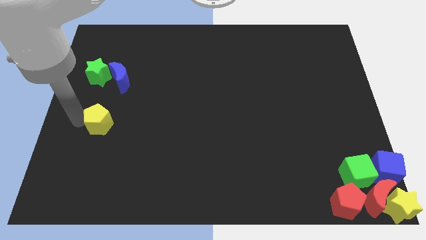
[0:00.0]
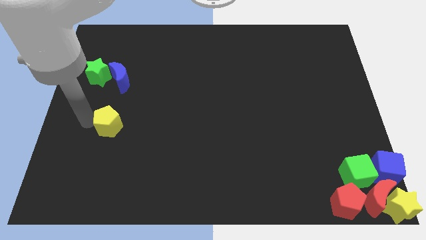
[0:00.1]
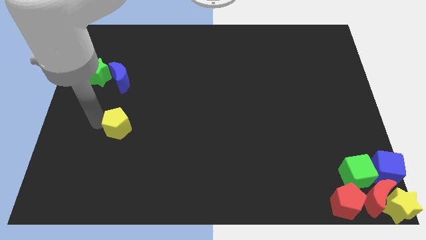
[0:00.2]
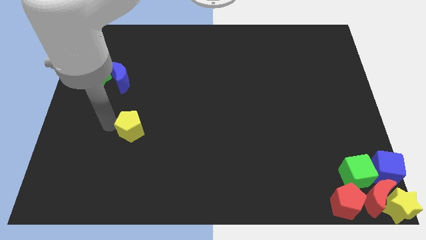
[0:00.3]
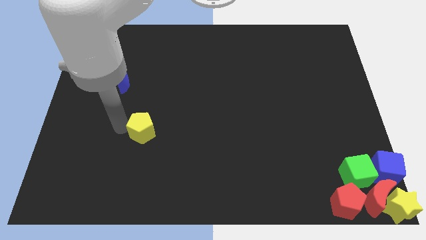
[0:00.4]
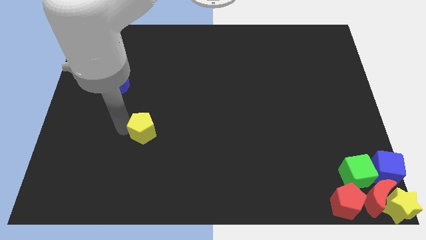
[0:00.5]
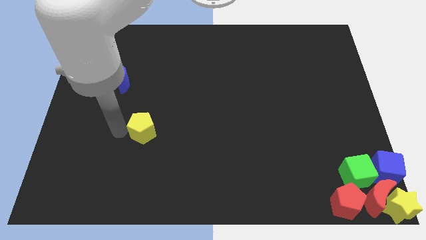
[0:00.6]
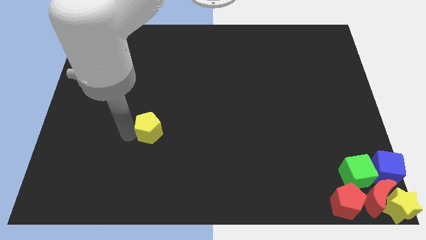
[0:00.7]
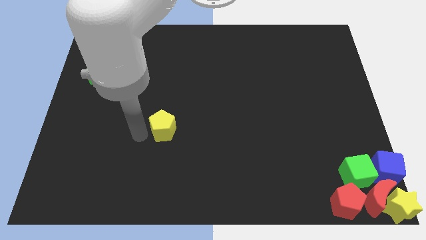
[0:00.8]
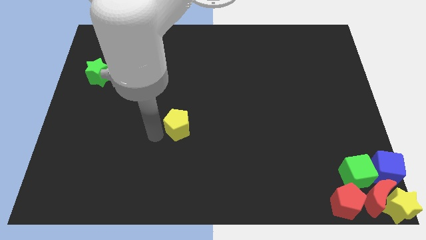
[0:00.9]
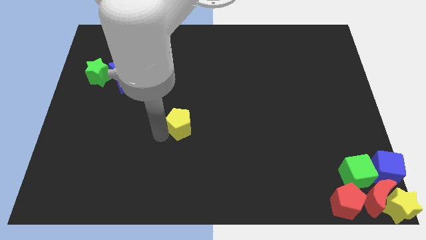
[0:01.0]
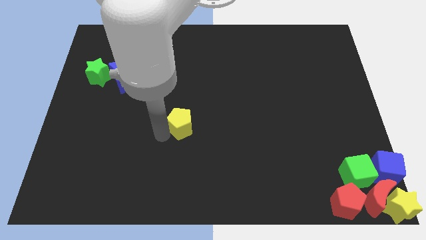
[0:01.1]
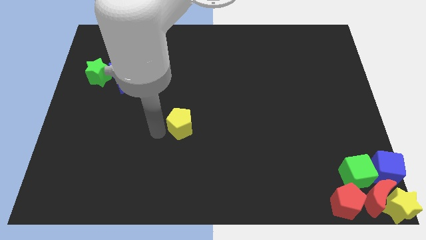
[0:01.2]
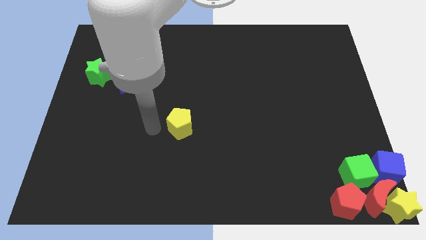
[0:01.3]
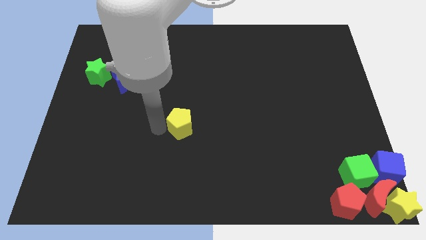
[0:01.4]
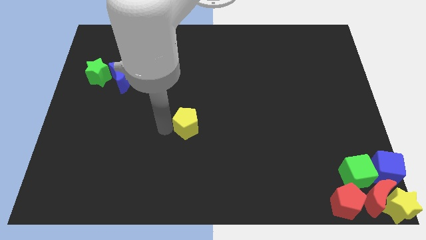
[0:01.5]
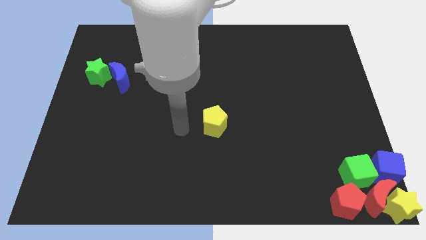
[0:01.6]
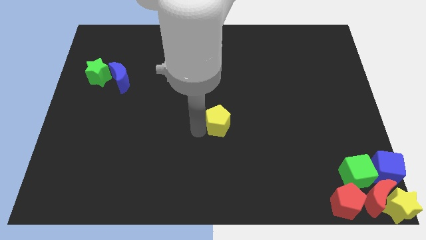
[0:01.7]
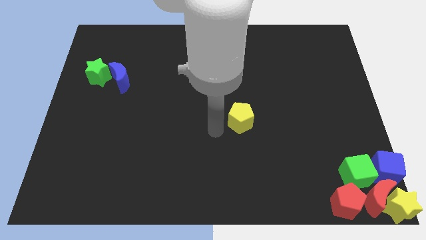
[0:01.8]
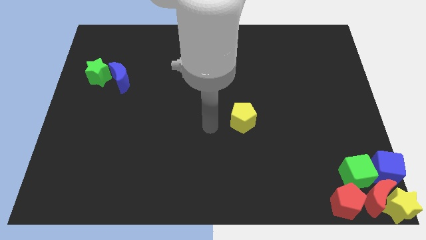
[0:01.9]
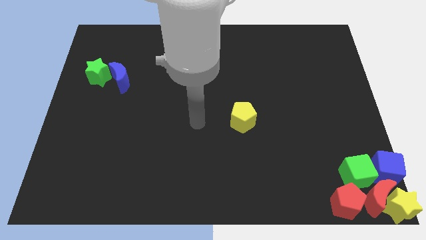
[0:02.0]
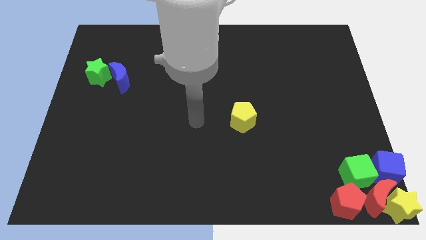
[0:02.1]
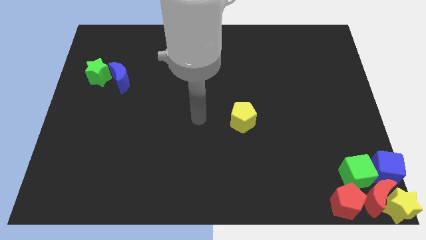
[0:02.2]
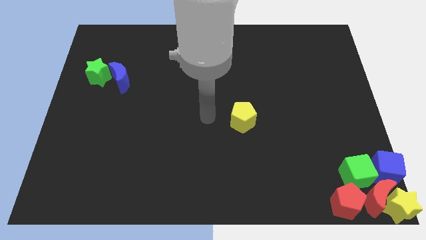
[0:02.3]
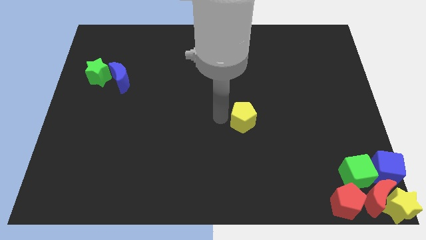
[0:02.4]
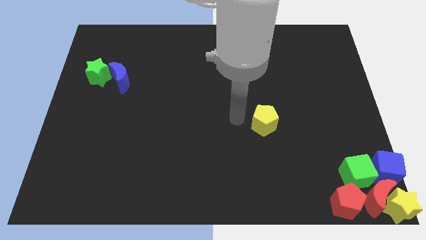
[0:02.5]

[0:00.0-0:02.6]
push yellow pentagon above green cube

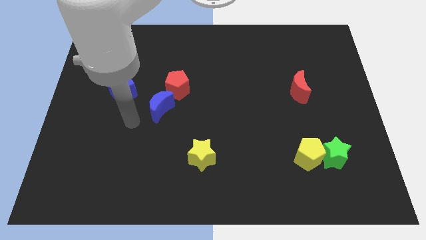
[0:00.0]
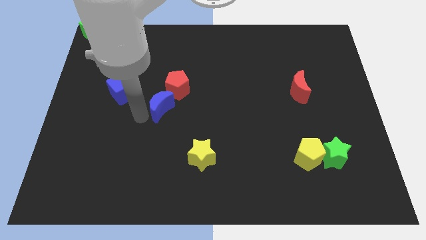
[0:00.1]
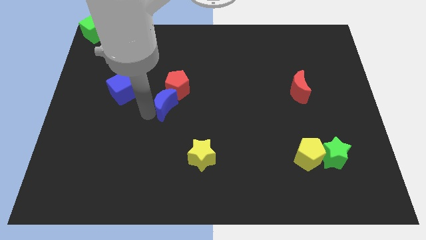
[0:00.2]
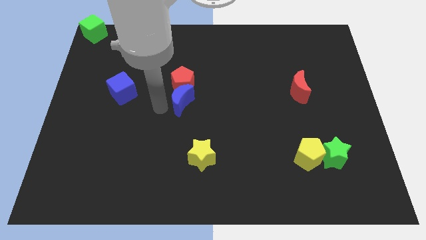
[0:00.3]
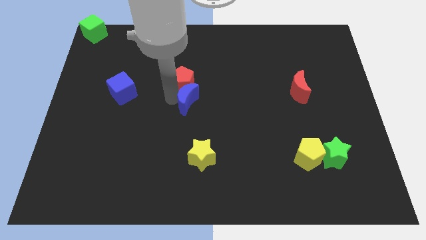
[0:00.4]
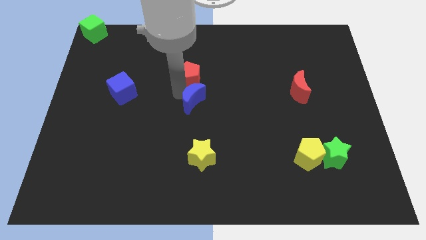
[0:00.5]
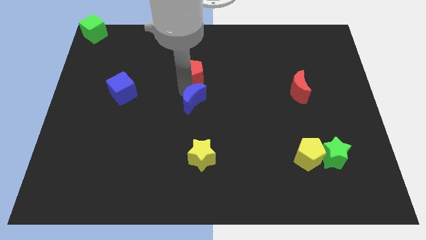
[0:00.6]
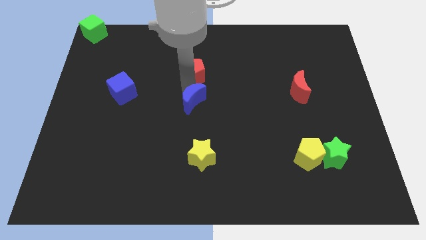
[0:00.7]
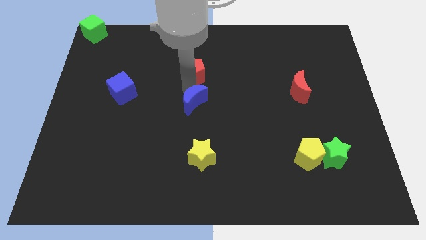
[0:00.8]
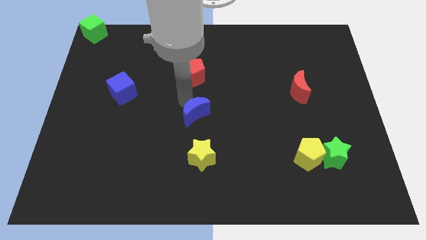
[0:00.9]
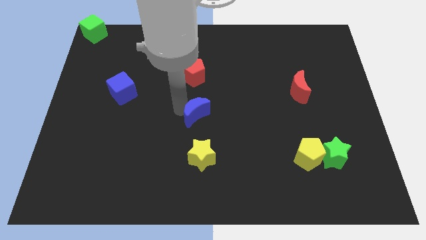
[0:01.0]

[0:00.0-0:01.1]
push blue moon away from the red pentagon

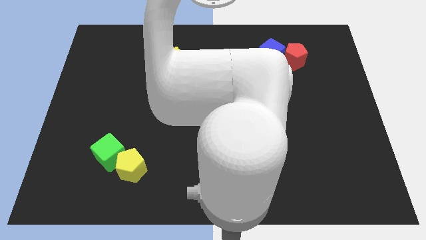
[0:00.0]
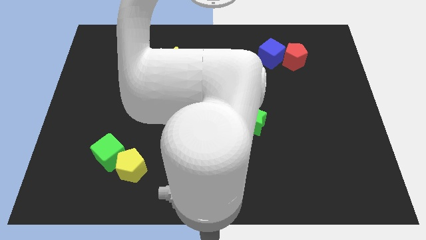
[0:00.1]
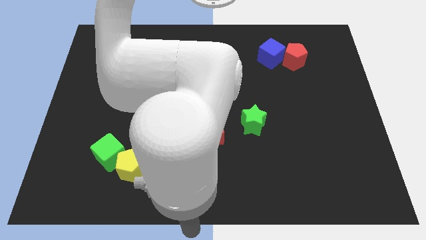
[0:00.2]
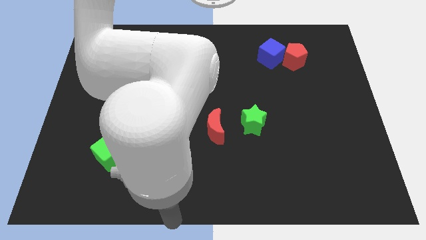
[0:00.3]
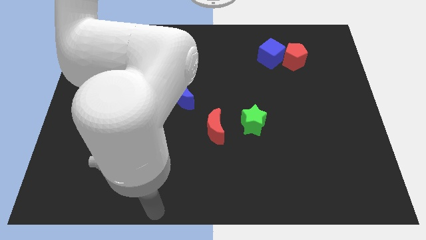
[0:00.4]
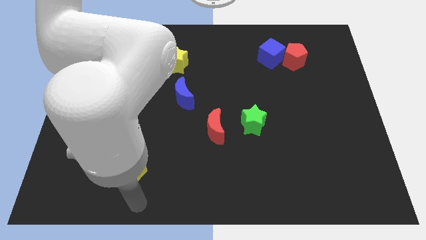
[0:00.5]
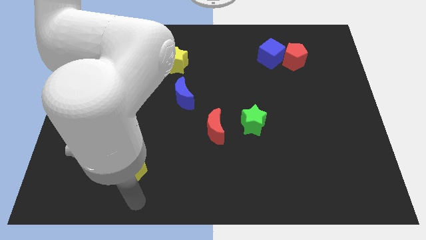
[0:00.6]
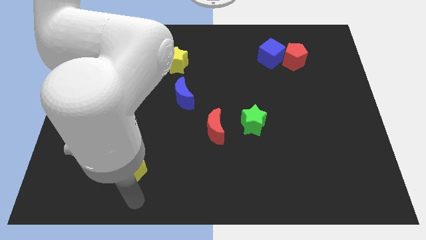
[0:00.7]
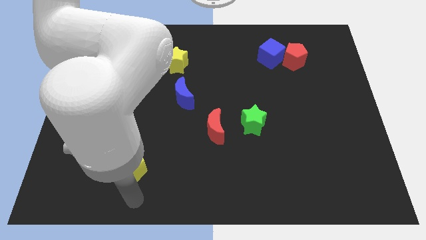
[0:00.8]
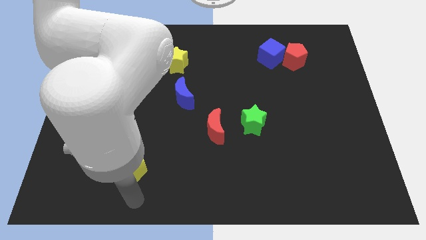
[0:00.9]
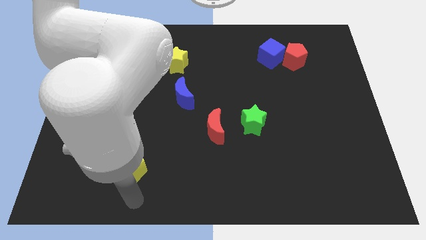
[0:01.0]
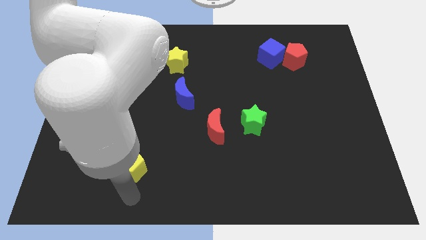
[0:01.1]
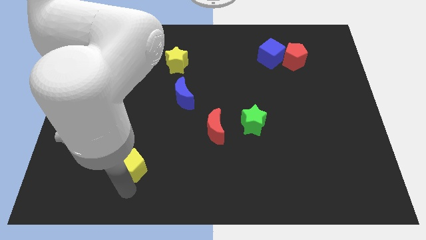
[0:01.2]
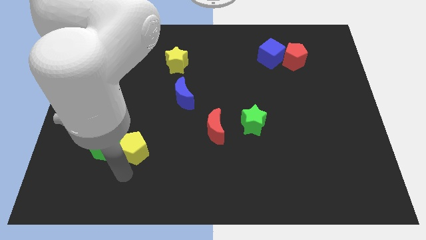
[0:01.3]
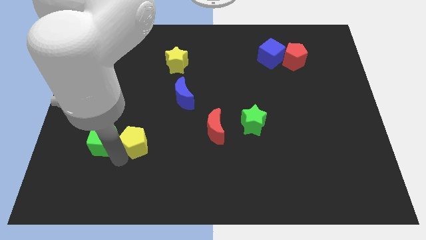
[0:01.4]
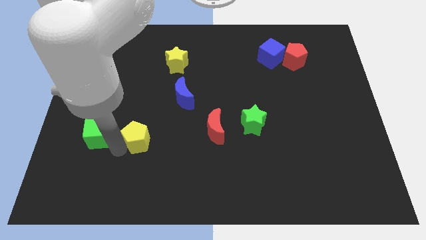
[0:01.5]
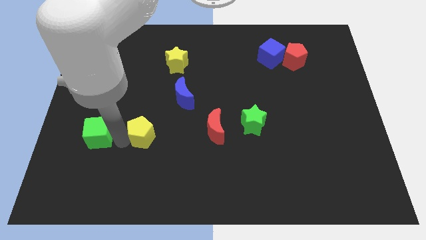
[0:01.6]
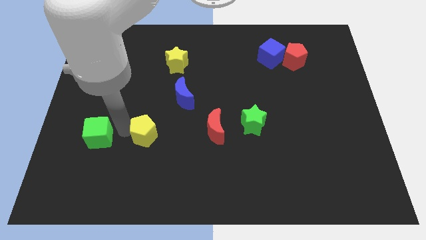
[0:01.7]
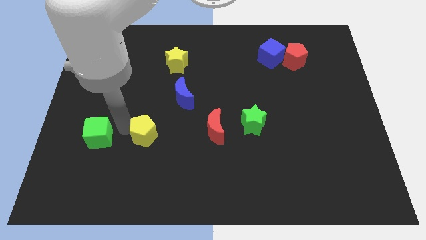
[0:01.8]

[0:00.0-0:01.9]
push the yellow pentagon to the right of the green cube

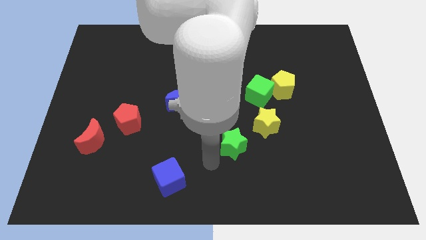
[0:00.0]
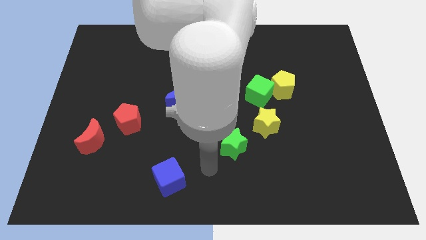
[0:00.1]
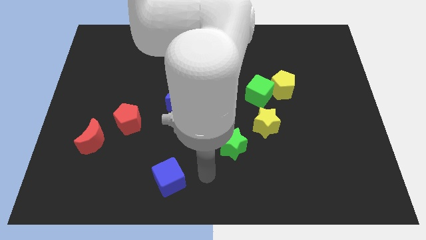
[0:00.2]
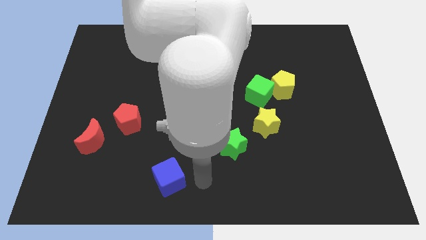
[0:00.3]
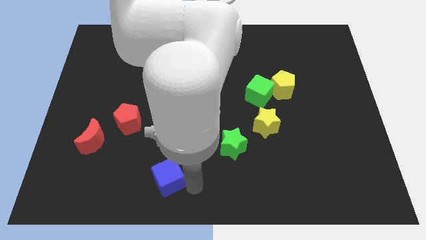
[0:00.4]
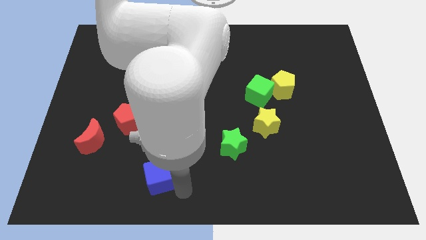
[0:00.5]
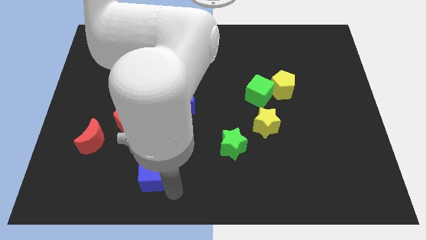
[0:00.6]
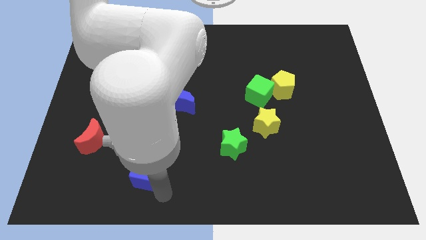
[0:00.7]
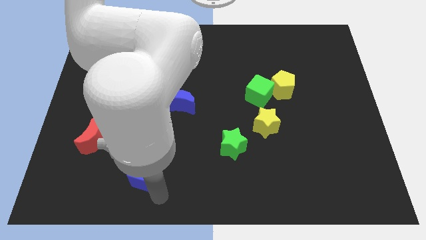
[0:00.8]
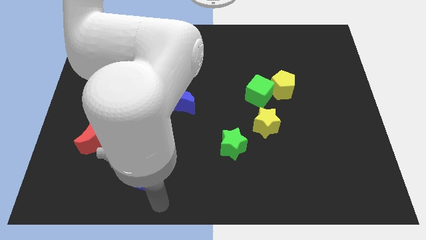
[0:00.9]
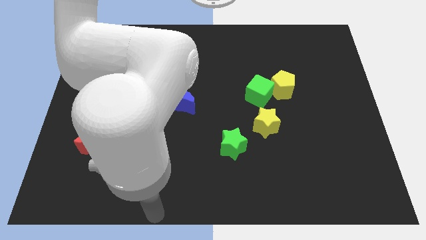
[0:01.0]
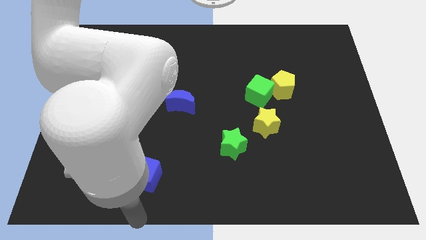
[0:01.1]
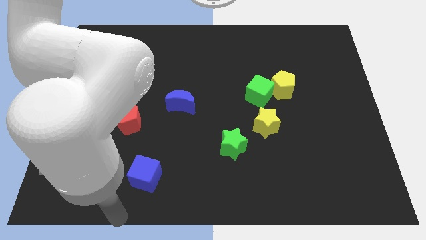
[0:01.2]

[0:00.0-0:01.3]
slightly push the blue cube towards the left side of the board

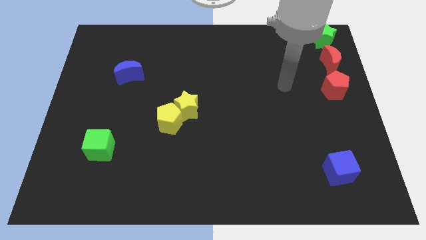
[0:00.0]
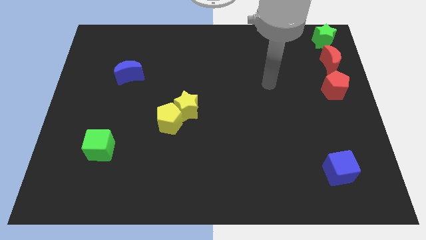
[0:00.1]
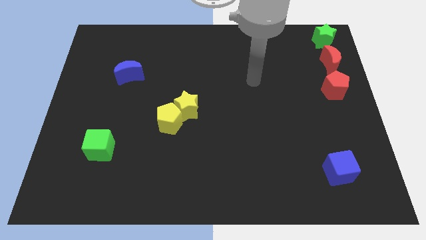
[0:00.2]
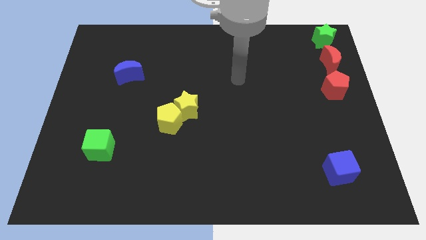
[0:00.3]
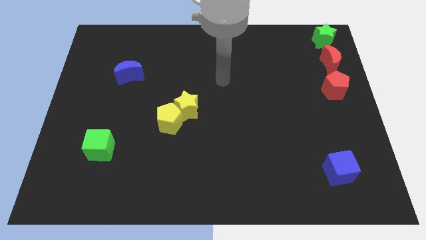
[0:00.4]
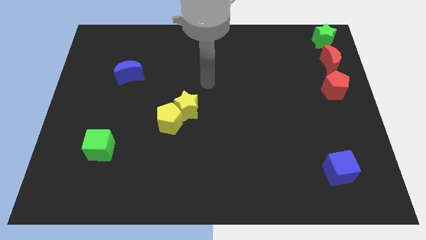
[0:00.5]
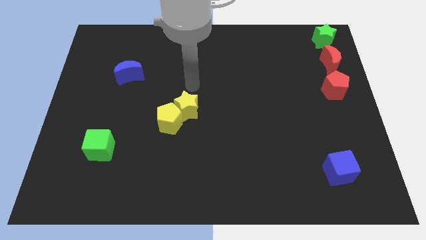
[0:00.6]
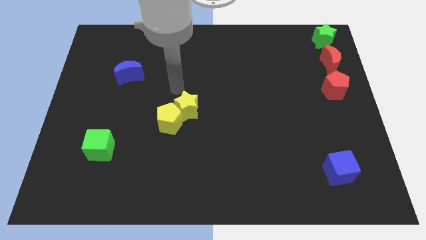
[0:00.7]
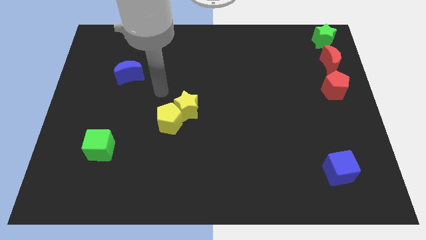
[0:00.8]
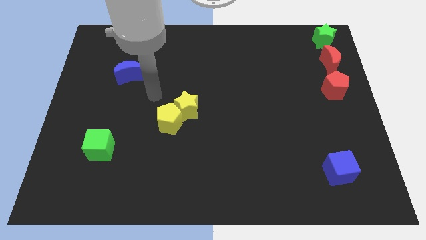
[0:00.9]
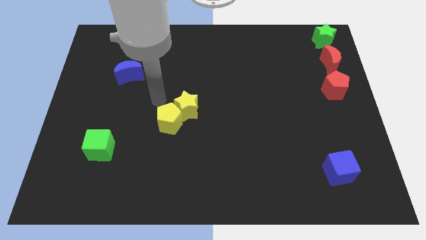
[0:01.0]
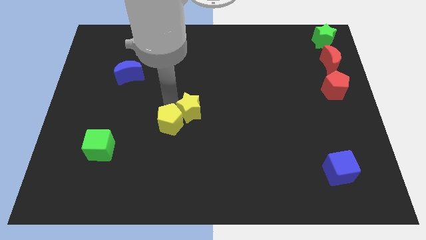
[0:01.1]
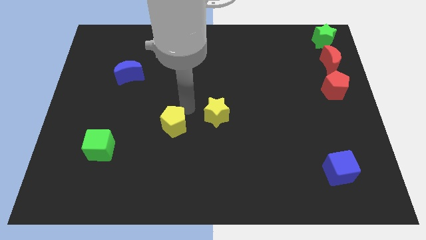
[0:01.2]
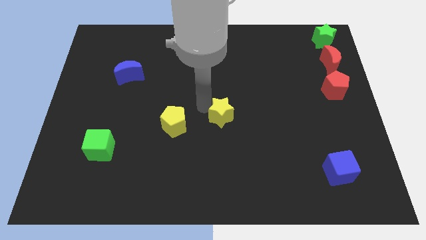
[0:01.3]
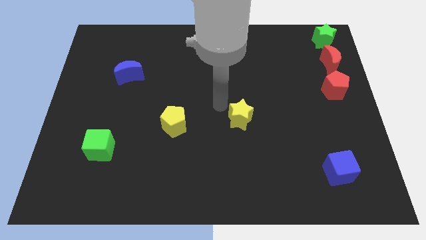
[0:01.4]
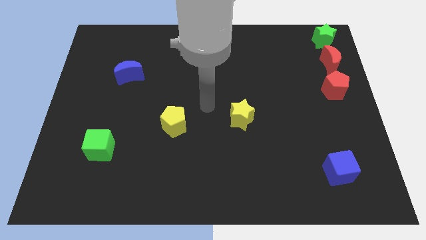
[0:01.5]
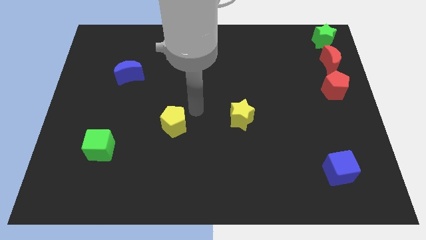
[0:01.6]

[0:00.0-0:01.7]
separate the yellow star from yellow pentagon

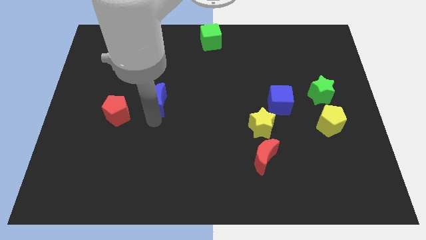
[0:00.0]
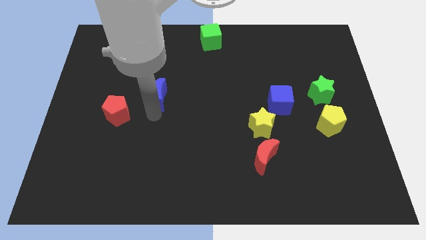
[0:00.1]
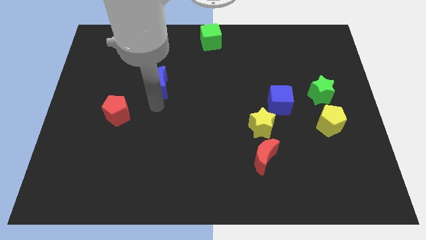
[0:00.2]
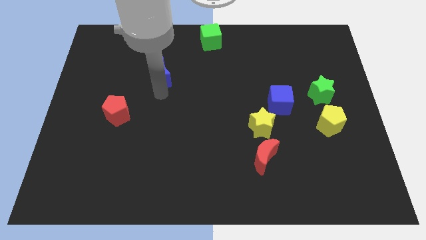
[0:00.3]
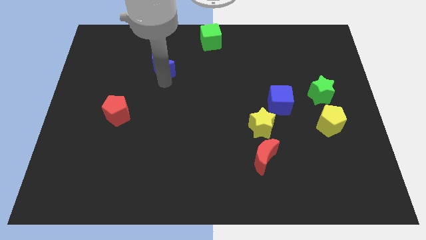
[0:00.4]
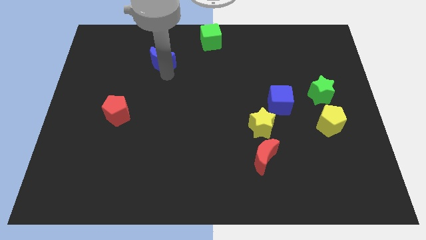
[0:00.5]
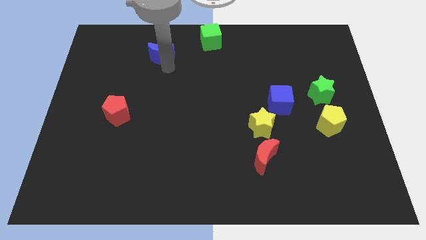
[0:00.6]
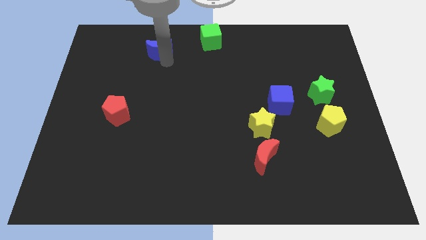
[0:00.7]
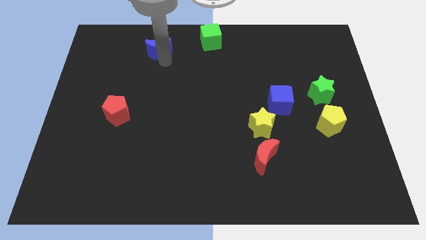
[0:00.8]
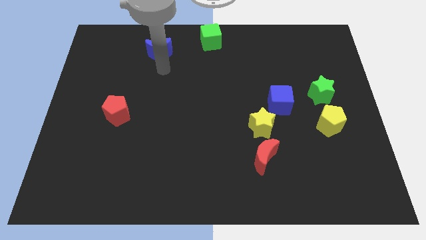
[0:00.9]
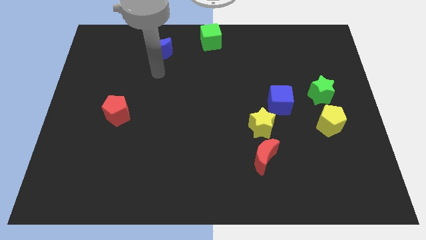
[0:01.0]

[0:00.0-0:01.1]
push the blue crescent towards up
